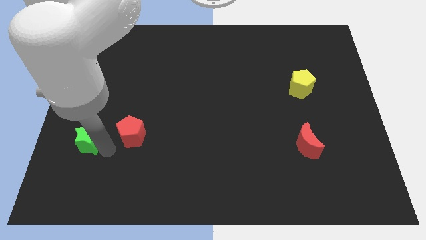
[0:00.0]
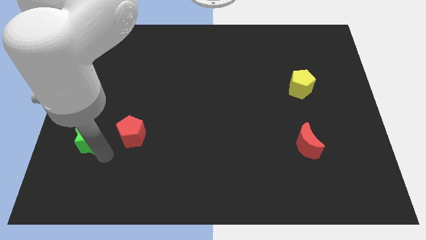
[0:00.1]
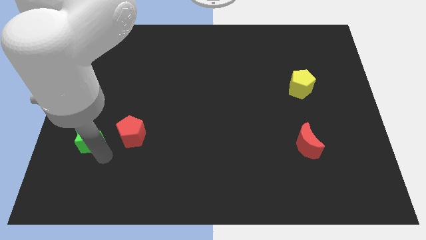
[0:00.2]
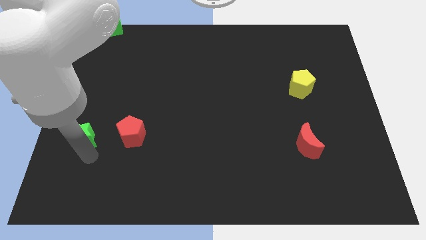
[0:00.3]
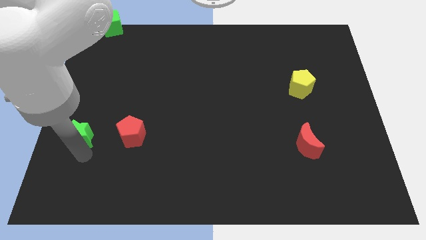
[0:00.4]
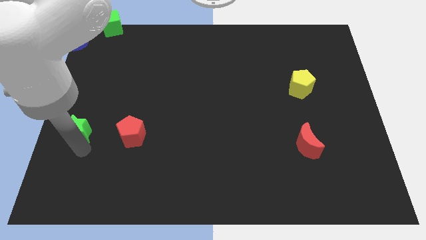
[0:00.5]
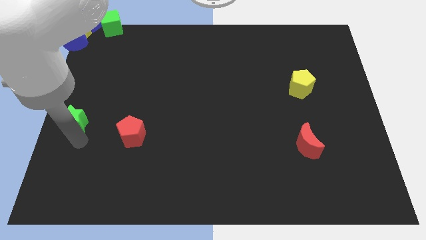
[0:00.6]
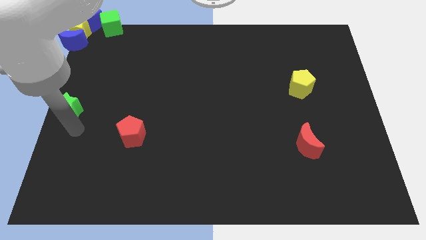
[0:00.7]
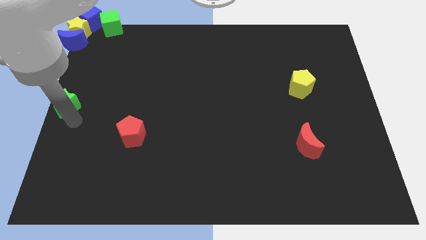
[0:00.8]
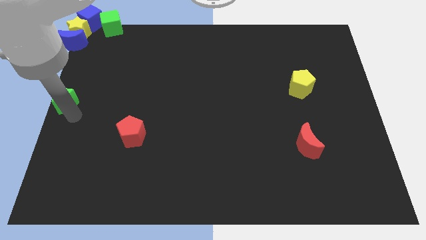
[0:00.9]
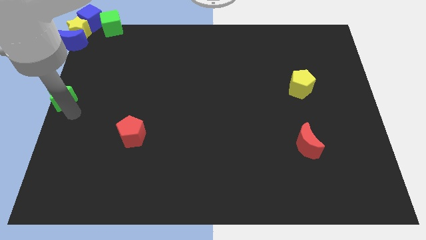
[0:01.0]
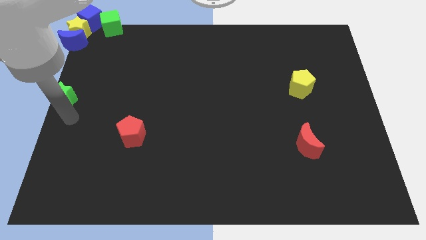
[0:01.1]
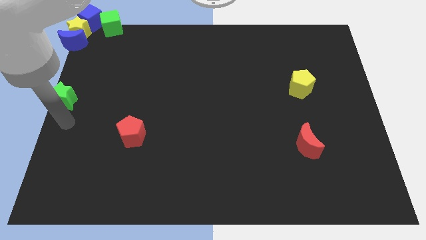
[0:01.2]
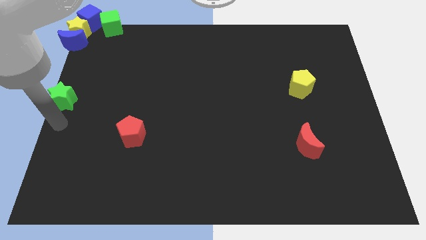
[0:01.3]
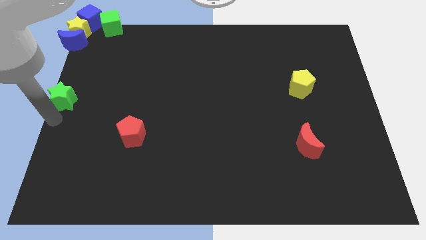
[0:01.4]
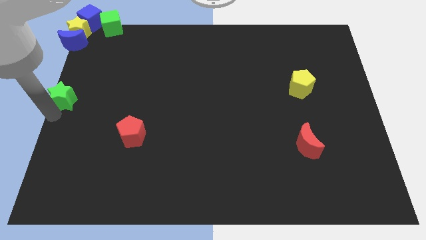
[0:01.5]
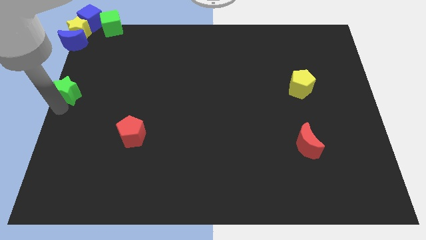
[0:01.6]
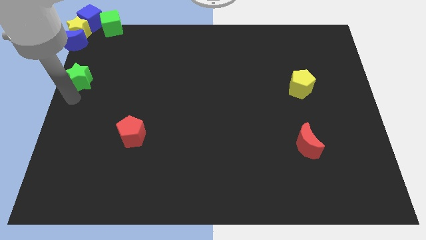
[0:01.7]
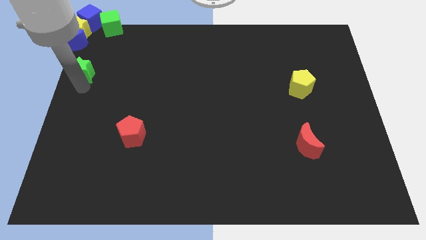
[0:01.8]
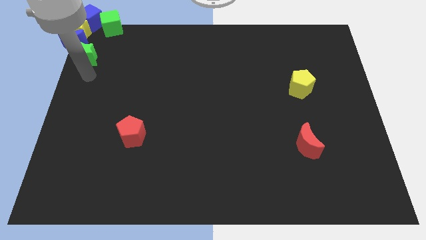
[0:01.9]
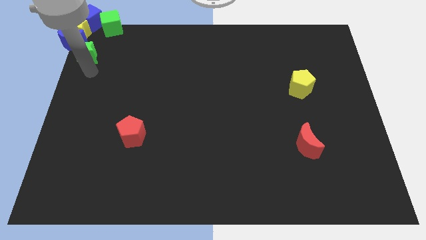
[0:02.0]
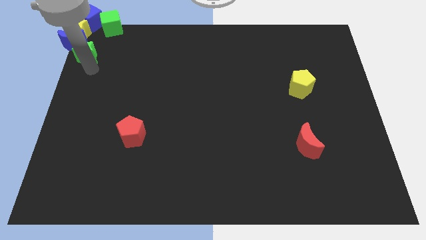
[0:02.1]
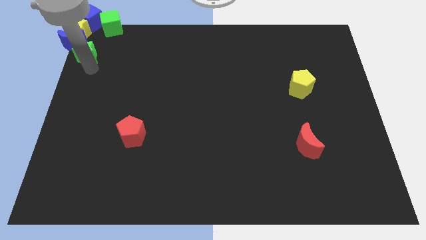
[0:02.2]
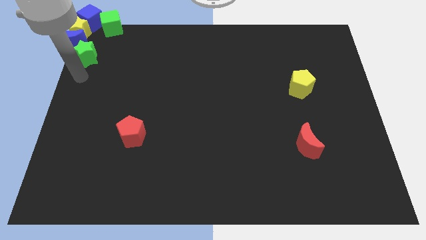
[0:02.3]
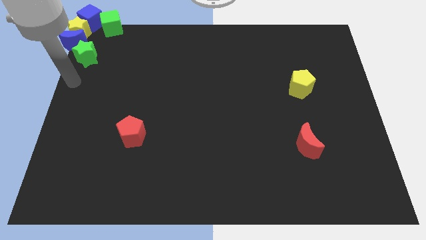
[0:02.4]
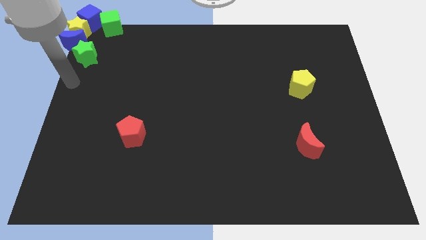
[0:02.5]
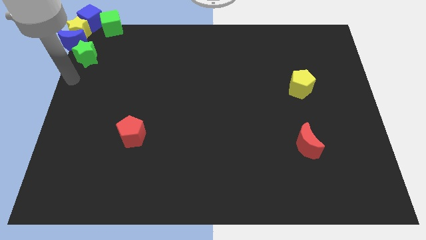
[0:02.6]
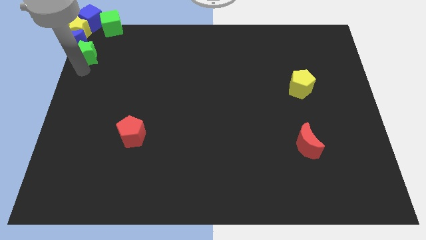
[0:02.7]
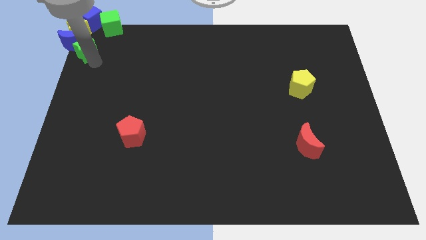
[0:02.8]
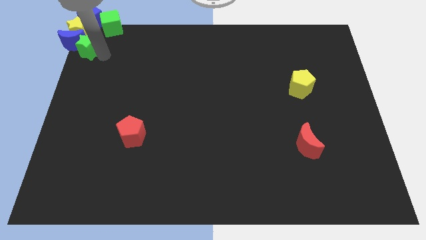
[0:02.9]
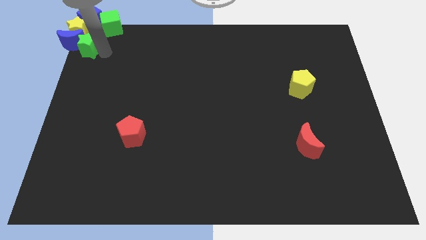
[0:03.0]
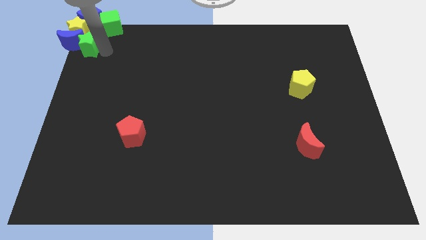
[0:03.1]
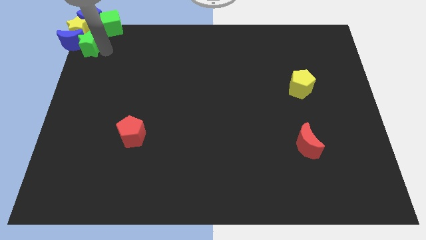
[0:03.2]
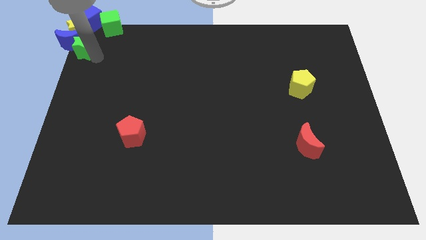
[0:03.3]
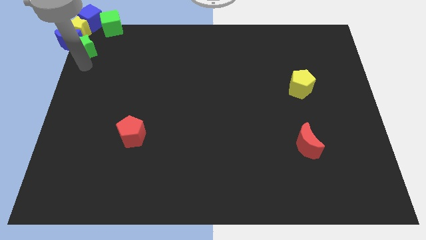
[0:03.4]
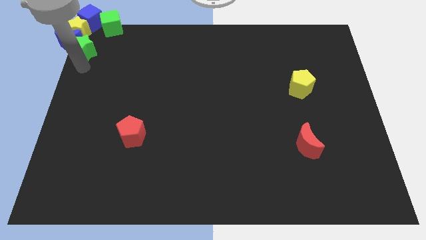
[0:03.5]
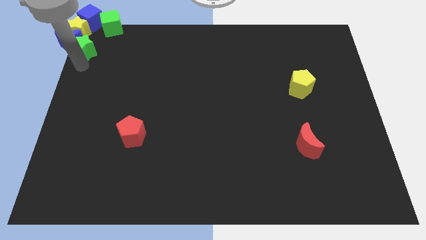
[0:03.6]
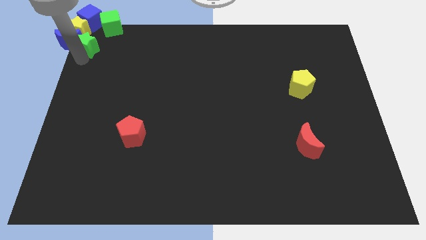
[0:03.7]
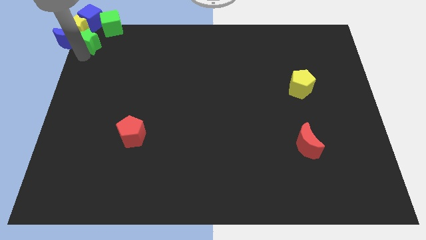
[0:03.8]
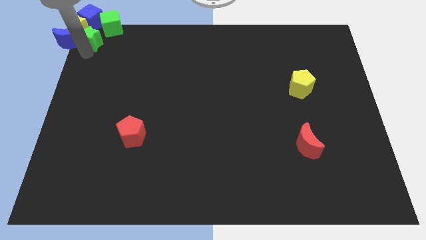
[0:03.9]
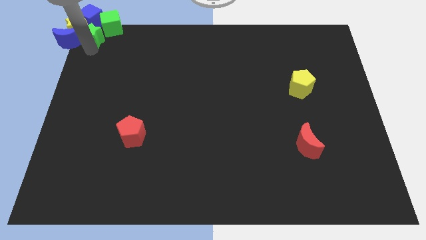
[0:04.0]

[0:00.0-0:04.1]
push the green star into the blue crescent

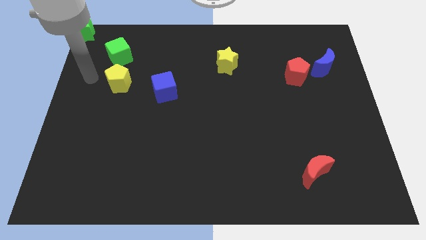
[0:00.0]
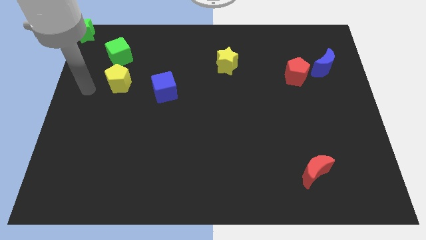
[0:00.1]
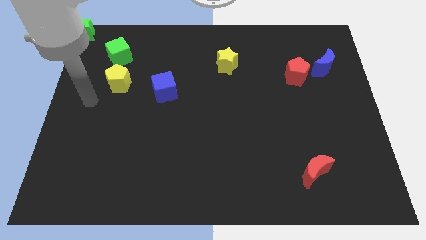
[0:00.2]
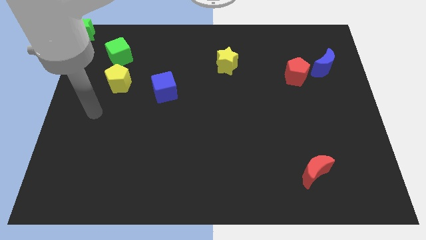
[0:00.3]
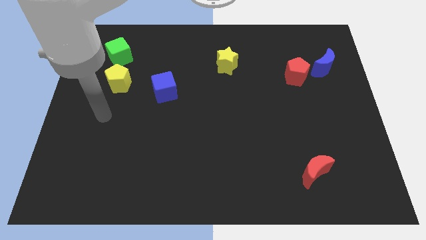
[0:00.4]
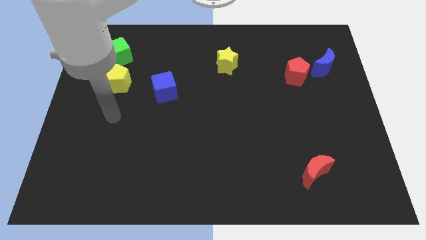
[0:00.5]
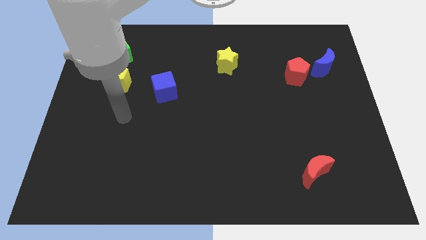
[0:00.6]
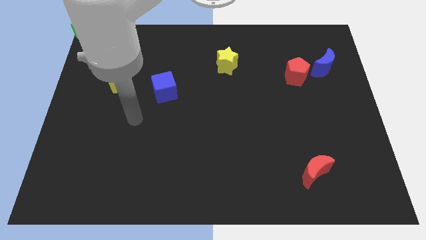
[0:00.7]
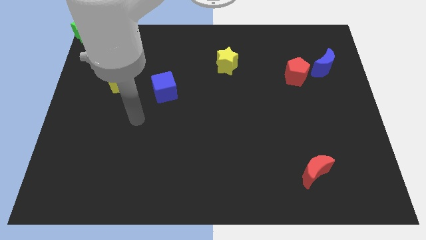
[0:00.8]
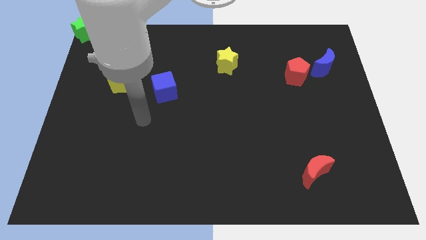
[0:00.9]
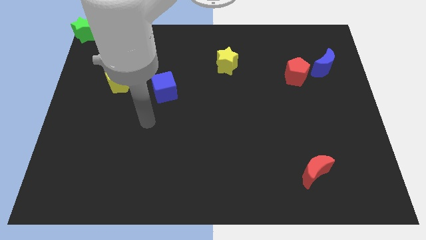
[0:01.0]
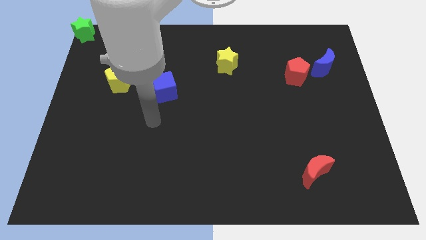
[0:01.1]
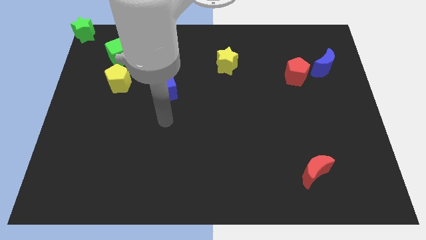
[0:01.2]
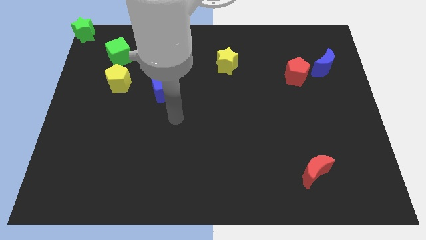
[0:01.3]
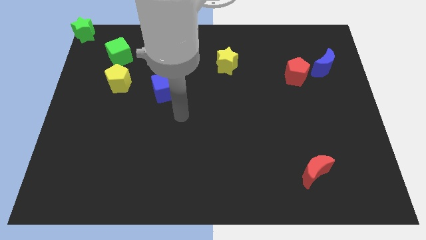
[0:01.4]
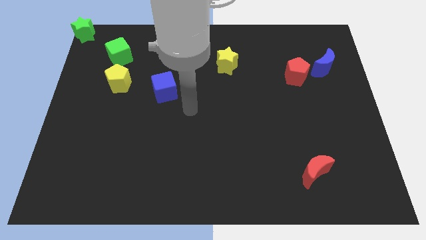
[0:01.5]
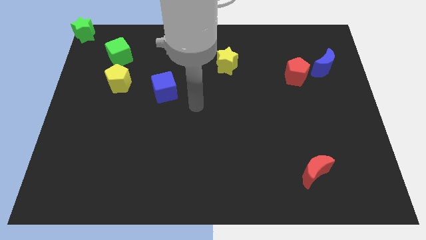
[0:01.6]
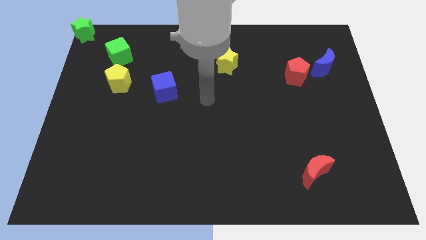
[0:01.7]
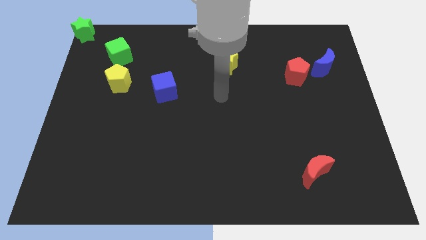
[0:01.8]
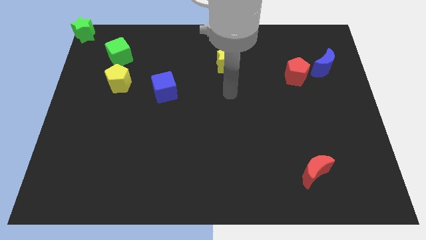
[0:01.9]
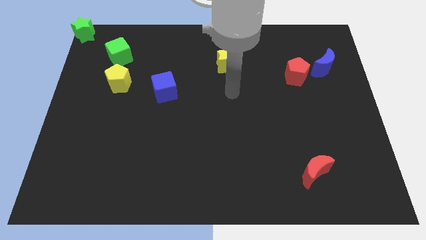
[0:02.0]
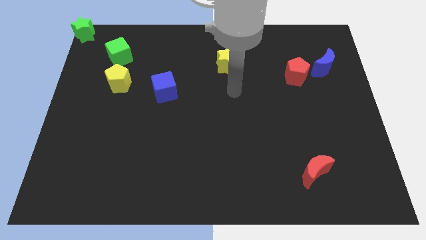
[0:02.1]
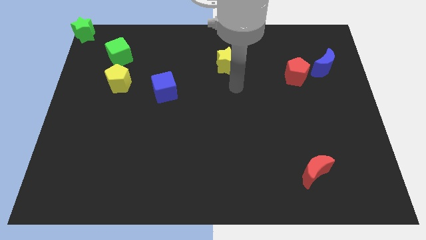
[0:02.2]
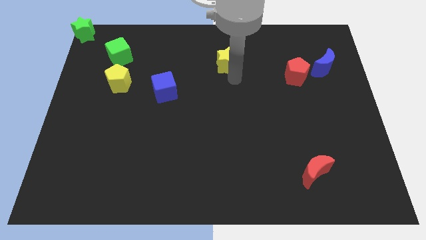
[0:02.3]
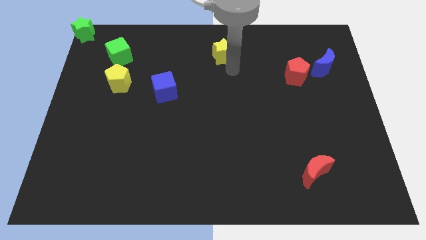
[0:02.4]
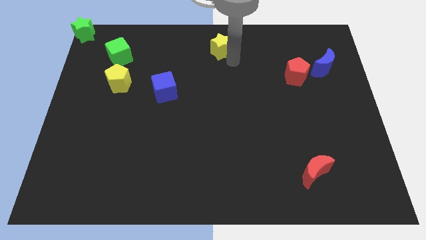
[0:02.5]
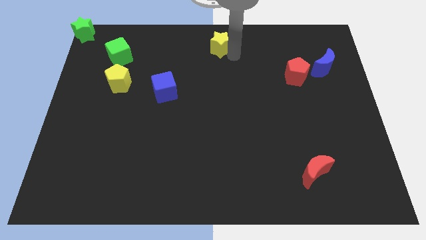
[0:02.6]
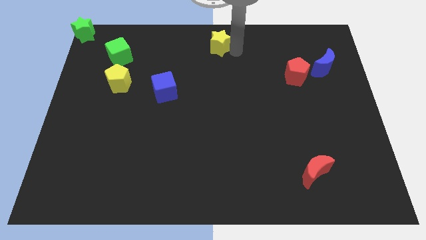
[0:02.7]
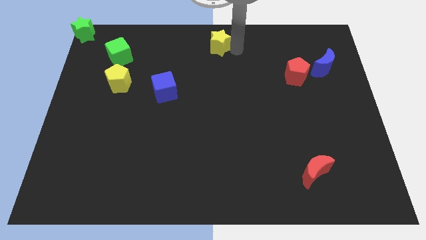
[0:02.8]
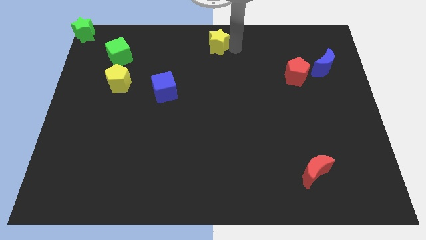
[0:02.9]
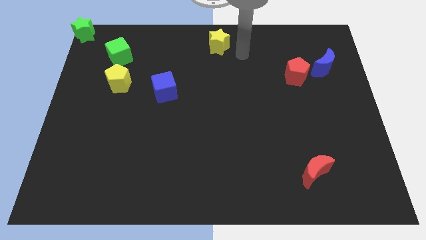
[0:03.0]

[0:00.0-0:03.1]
slide yellow star towards top center

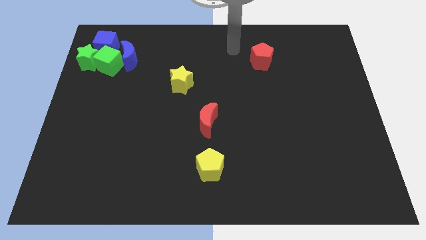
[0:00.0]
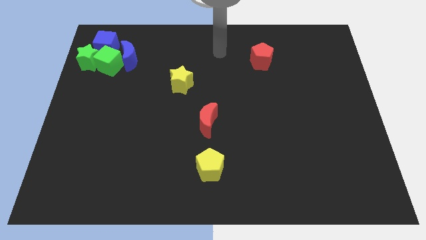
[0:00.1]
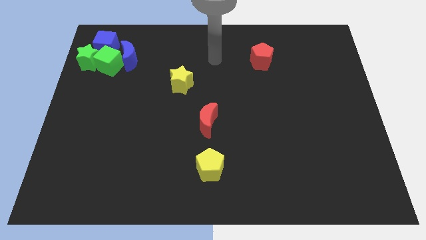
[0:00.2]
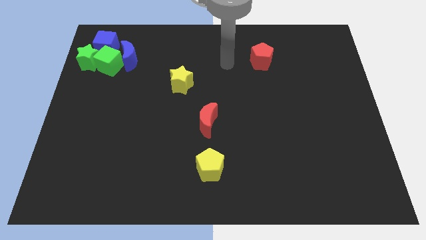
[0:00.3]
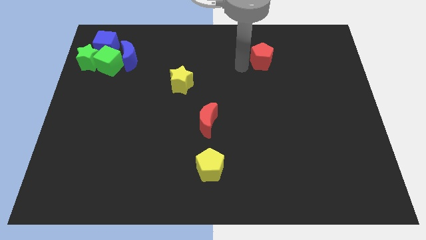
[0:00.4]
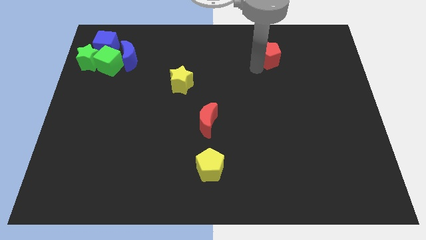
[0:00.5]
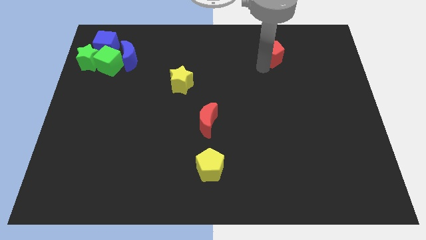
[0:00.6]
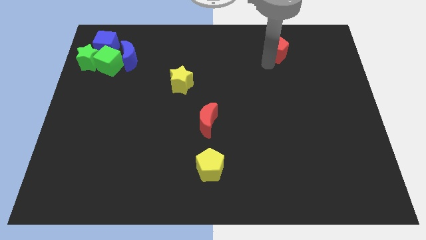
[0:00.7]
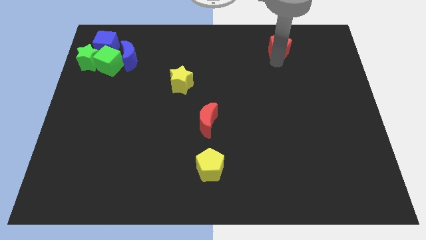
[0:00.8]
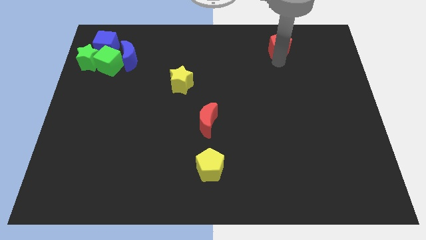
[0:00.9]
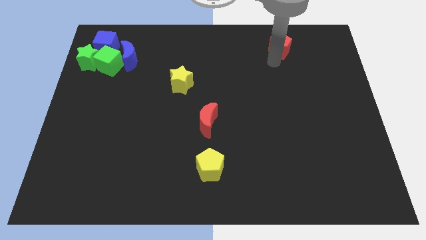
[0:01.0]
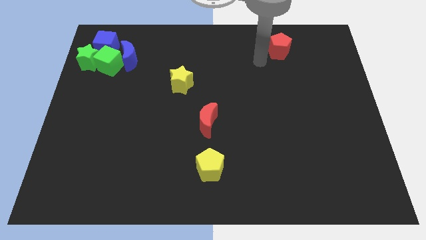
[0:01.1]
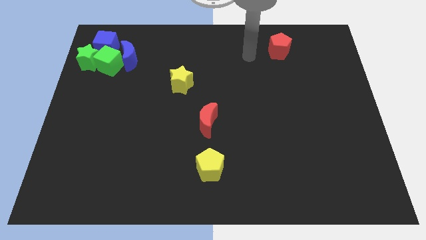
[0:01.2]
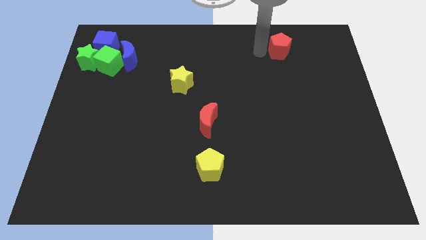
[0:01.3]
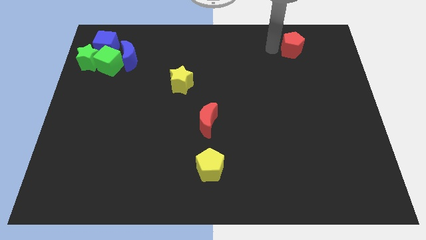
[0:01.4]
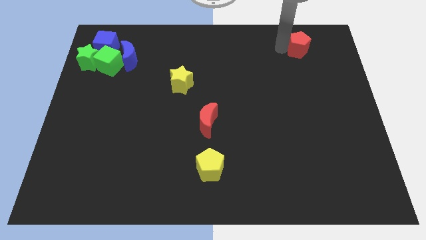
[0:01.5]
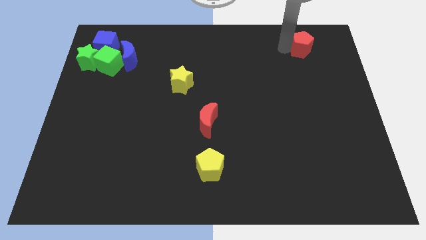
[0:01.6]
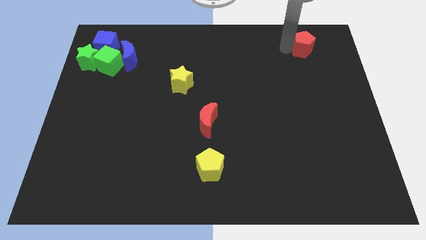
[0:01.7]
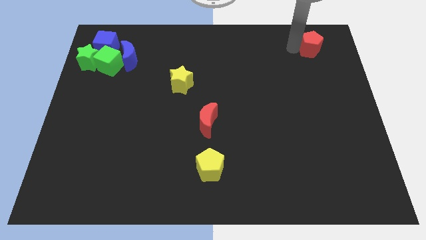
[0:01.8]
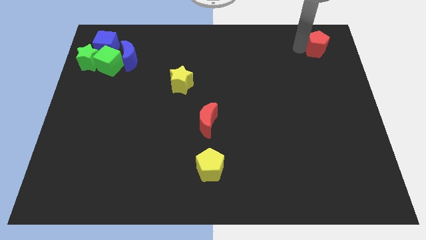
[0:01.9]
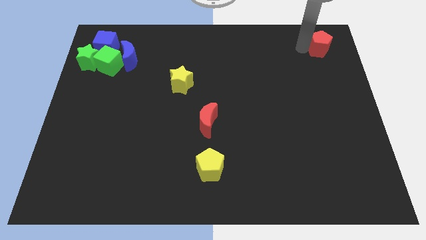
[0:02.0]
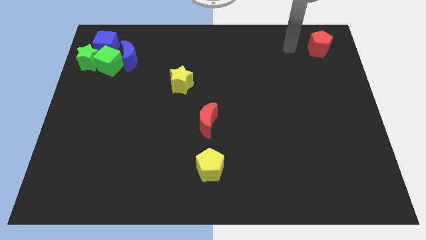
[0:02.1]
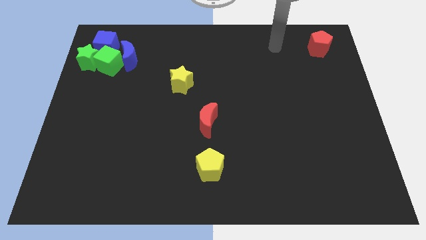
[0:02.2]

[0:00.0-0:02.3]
drag red pentagon towards top right of the board
